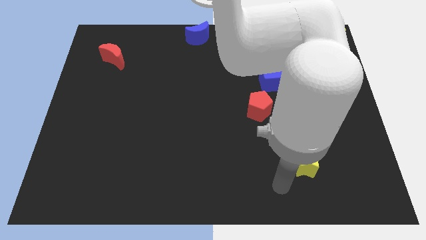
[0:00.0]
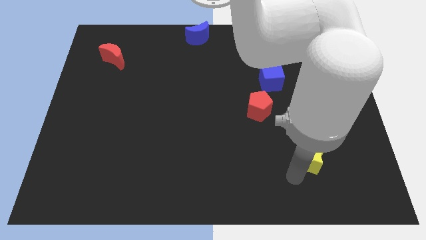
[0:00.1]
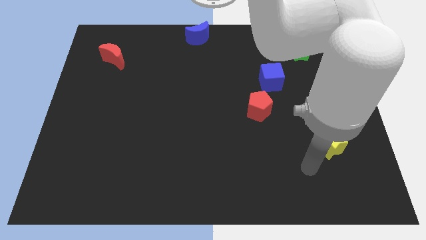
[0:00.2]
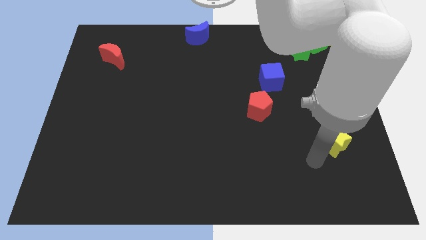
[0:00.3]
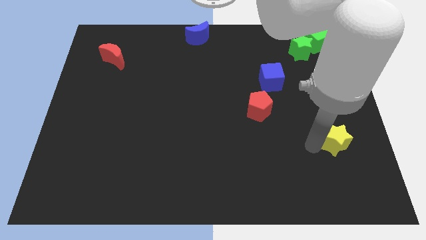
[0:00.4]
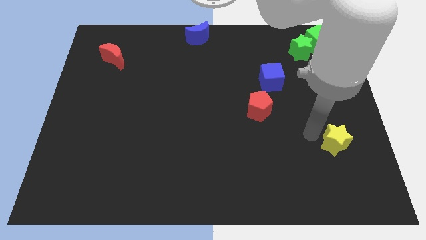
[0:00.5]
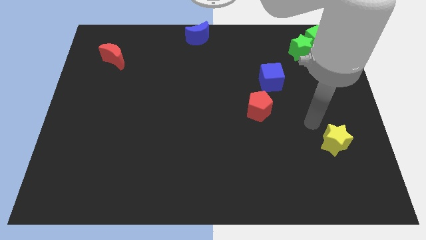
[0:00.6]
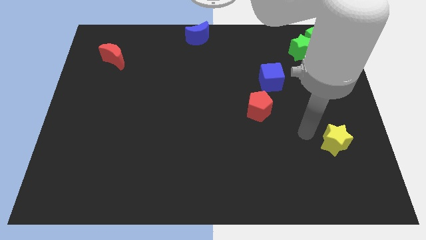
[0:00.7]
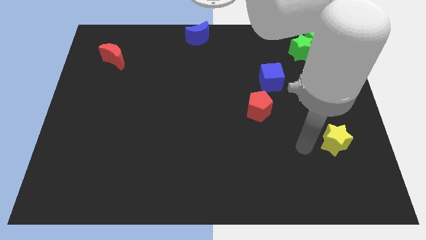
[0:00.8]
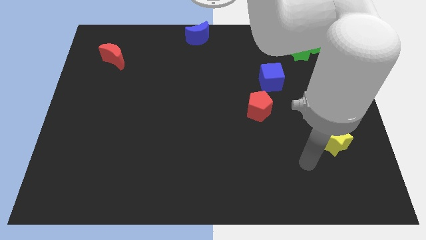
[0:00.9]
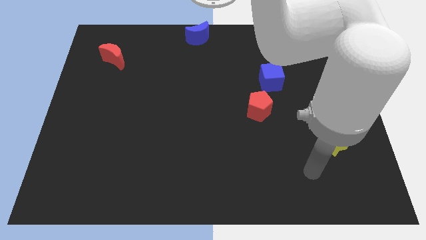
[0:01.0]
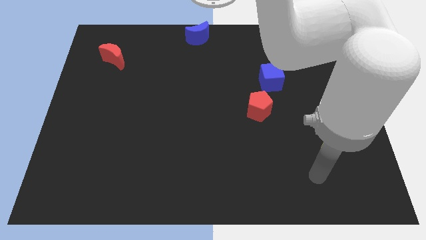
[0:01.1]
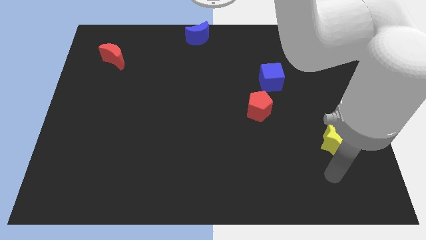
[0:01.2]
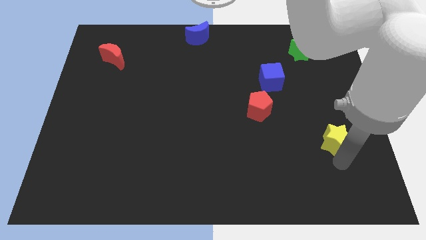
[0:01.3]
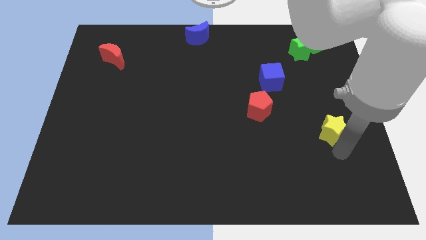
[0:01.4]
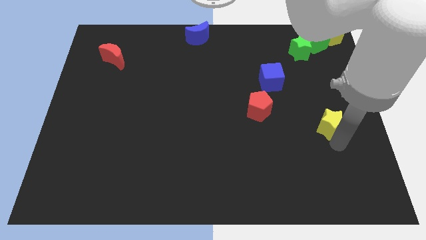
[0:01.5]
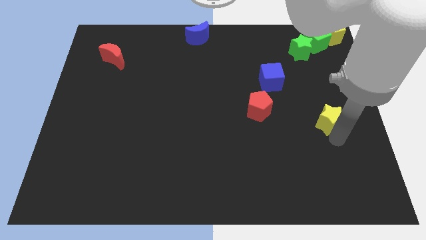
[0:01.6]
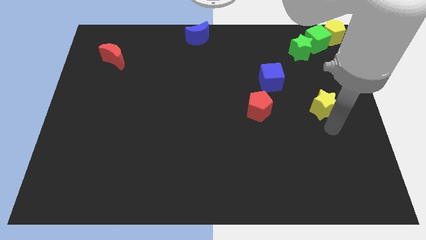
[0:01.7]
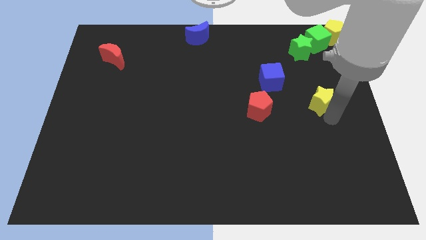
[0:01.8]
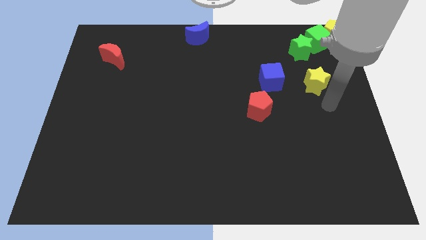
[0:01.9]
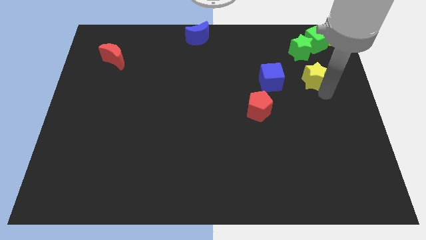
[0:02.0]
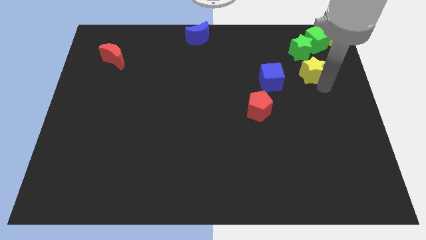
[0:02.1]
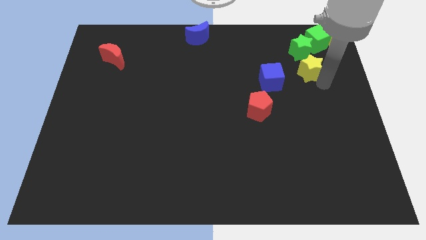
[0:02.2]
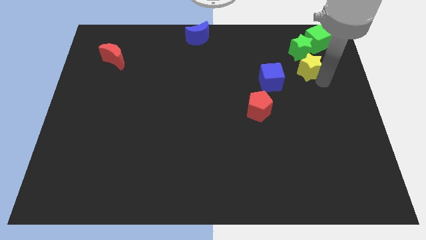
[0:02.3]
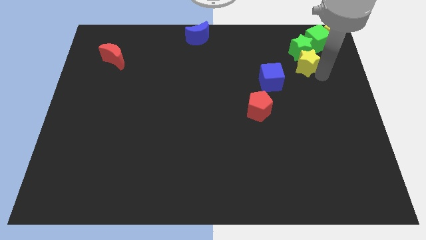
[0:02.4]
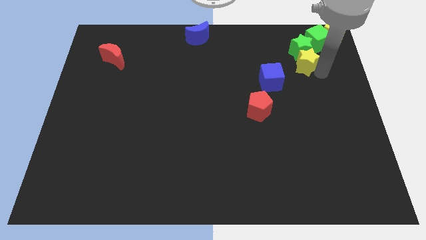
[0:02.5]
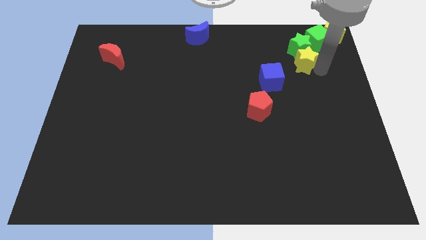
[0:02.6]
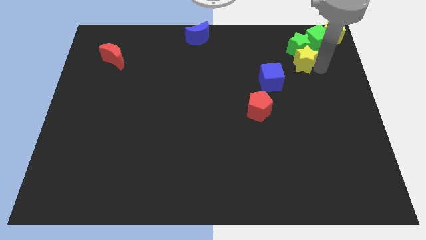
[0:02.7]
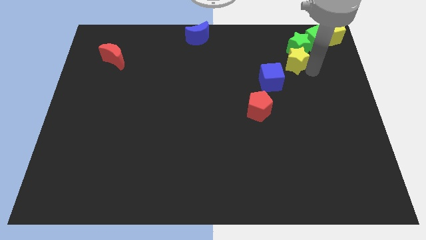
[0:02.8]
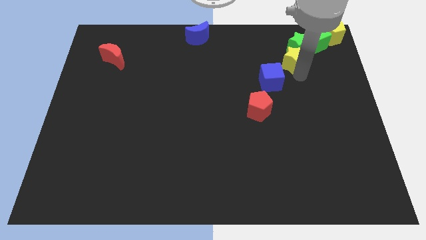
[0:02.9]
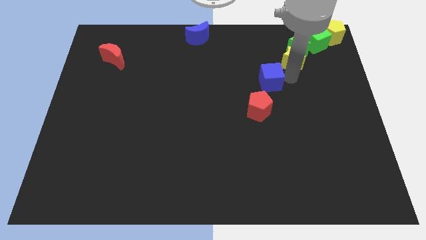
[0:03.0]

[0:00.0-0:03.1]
move the yellow star to the bottom left of the green star

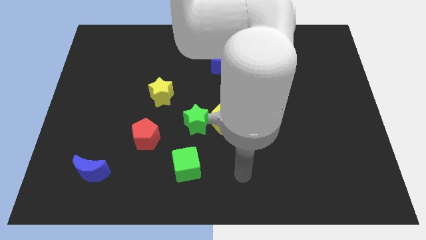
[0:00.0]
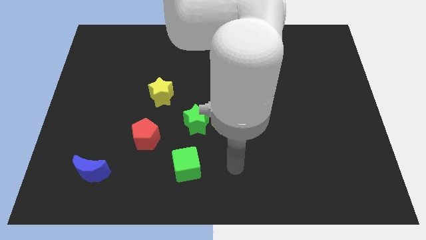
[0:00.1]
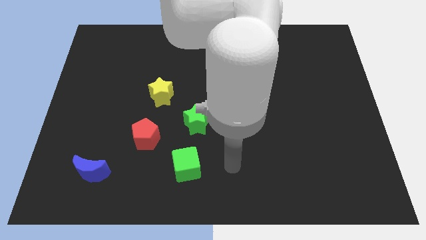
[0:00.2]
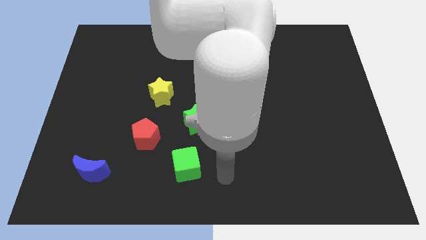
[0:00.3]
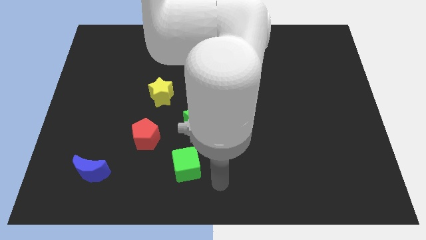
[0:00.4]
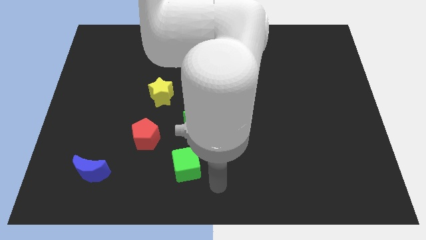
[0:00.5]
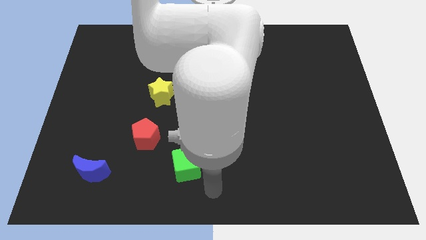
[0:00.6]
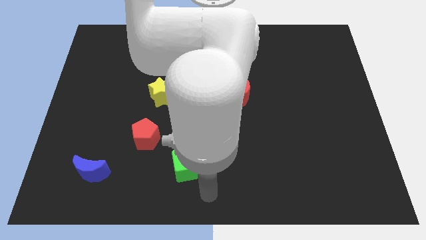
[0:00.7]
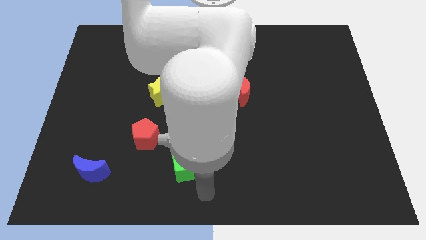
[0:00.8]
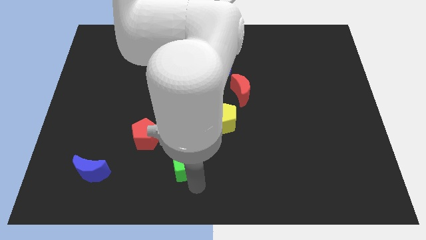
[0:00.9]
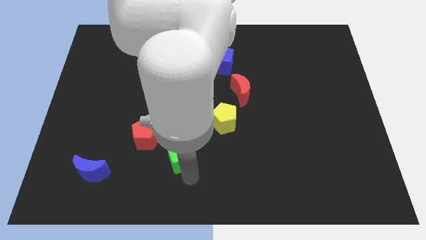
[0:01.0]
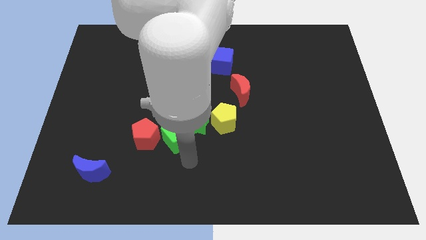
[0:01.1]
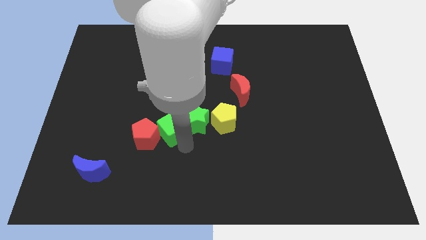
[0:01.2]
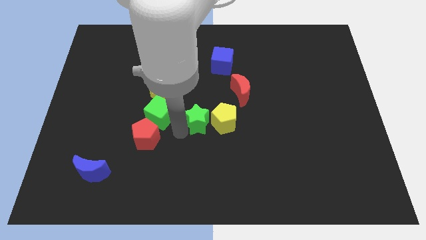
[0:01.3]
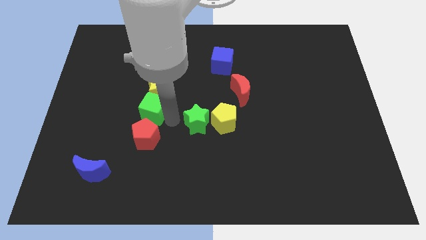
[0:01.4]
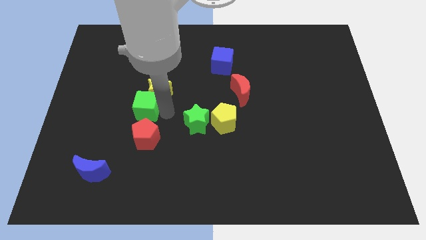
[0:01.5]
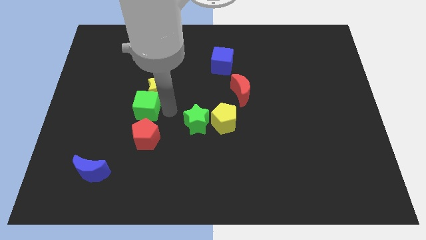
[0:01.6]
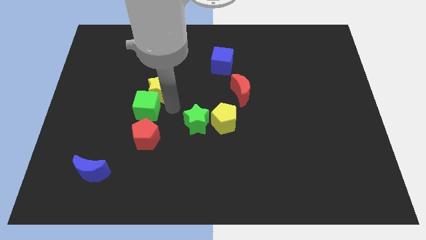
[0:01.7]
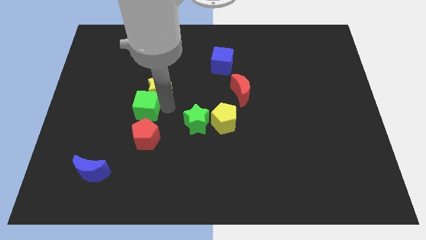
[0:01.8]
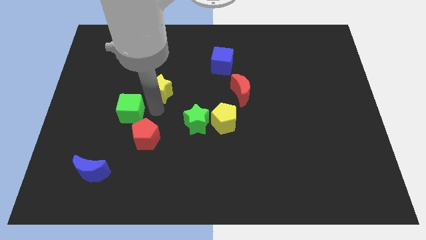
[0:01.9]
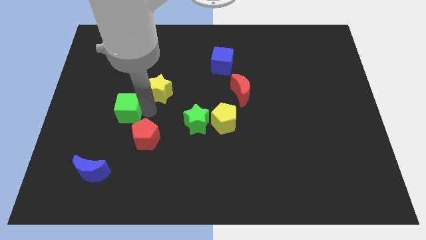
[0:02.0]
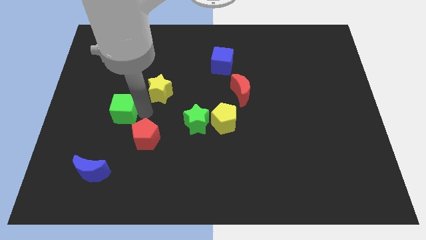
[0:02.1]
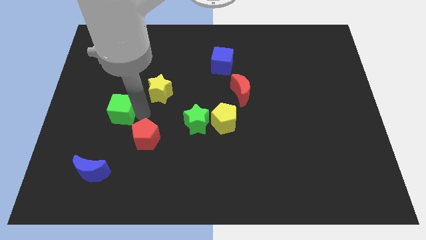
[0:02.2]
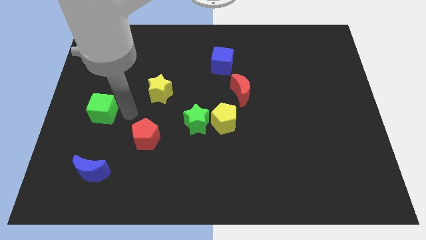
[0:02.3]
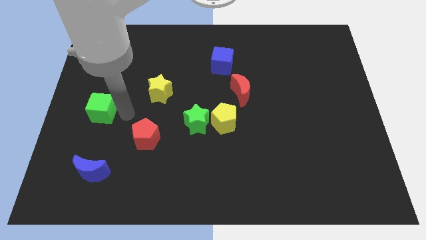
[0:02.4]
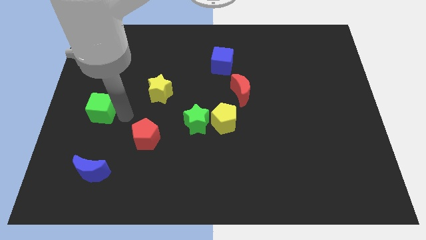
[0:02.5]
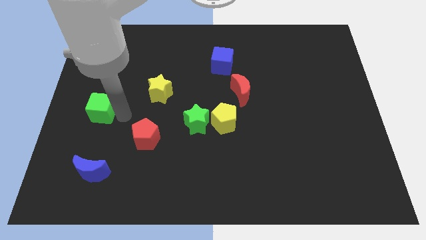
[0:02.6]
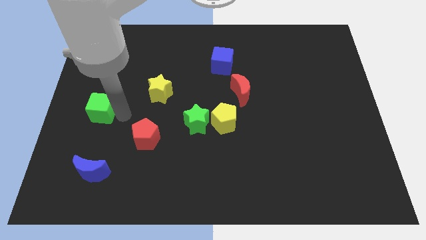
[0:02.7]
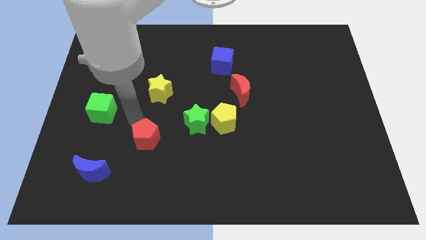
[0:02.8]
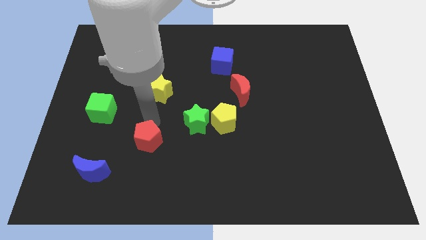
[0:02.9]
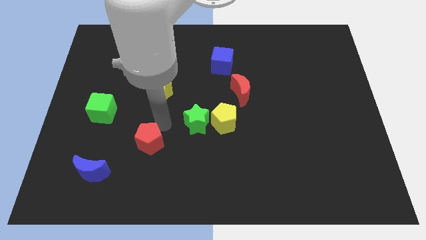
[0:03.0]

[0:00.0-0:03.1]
slightly push the green cube to the left

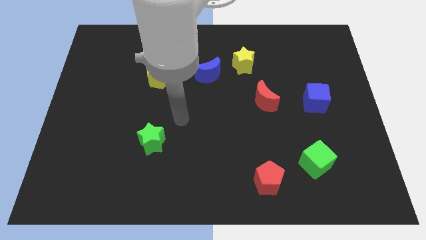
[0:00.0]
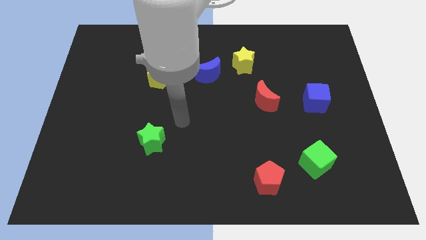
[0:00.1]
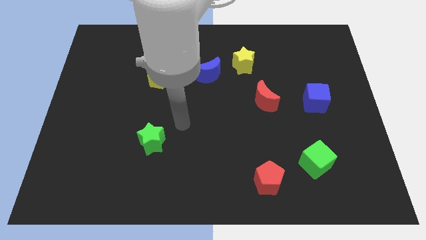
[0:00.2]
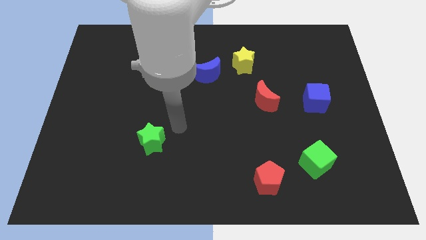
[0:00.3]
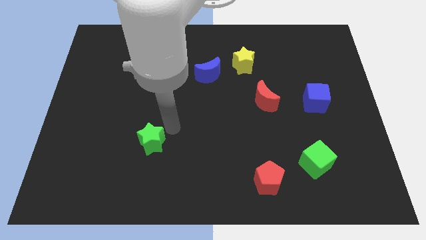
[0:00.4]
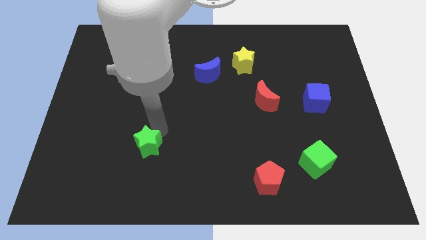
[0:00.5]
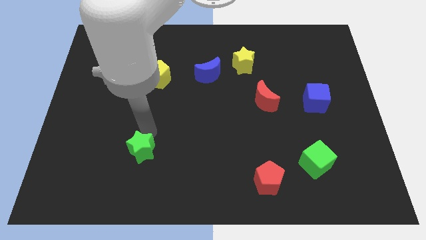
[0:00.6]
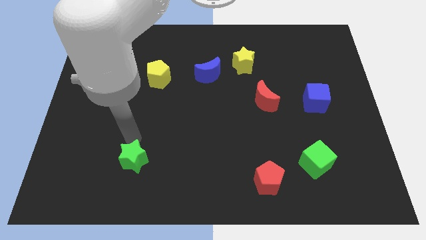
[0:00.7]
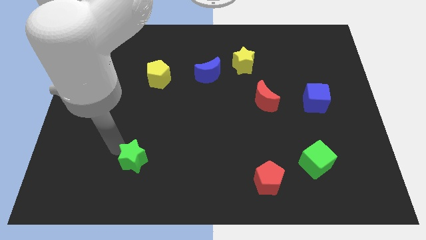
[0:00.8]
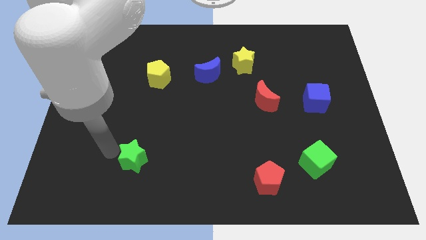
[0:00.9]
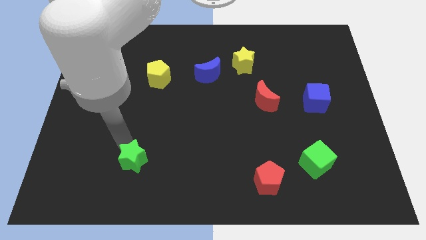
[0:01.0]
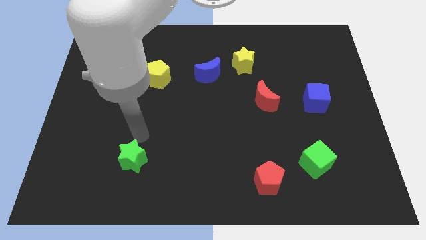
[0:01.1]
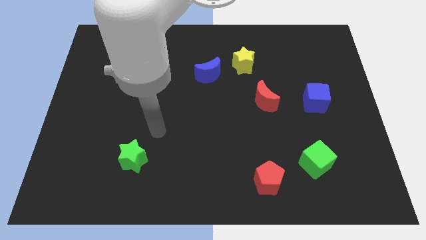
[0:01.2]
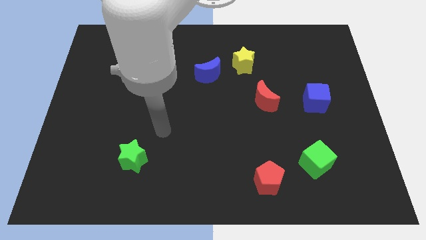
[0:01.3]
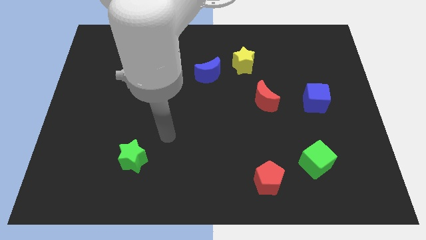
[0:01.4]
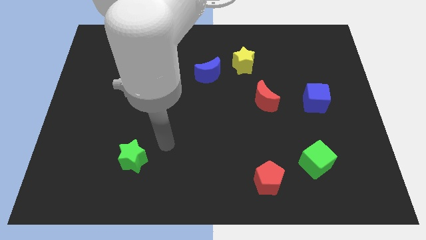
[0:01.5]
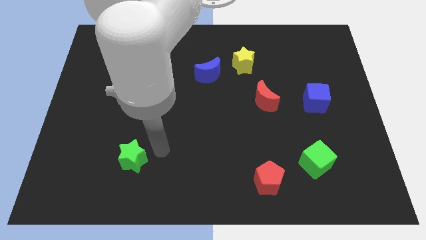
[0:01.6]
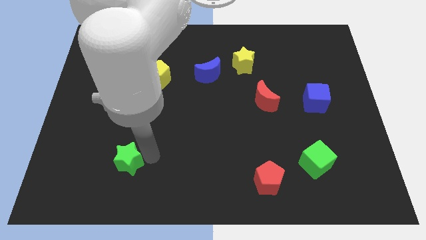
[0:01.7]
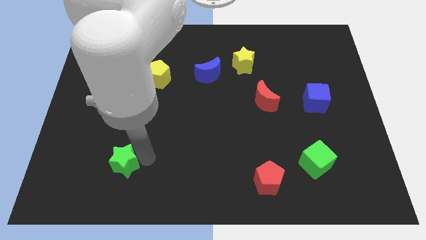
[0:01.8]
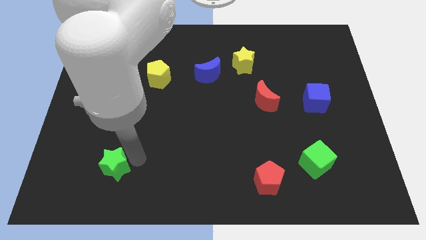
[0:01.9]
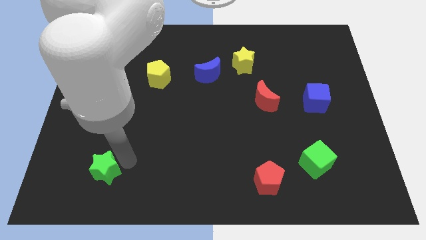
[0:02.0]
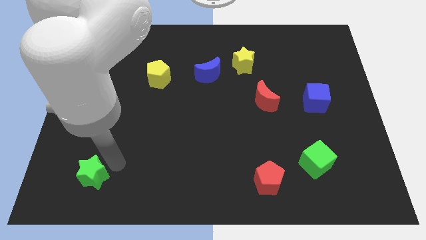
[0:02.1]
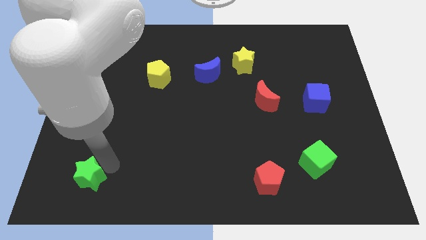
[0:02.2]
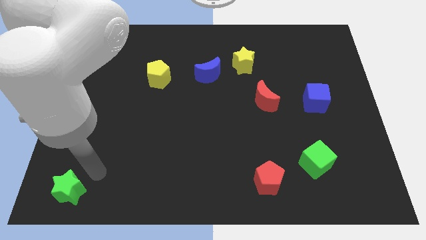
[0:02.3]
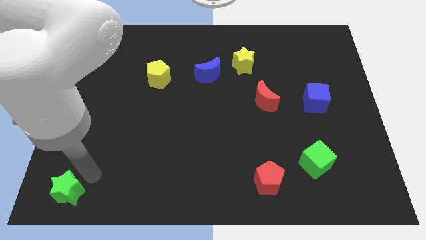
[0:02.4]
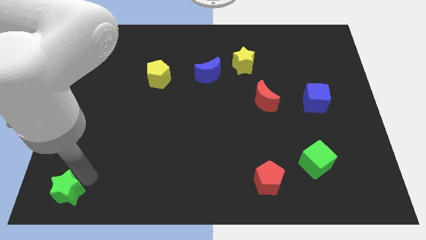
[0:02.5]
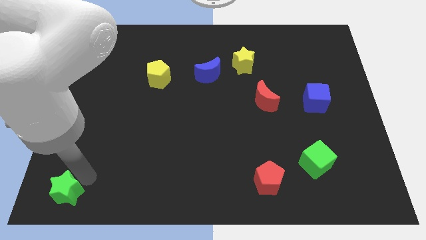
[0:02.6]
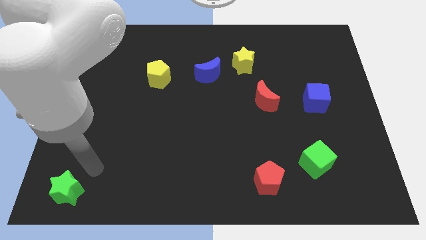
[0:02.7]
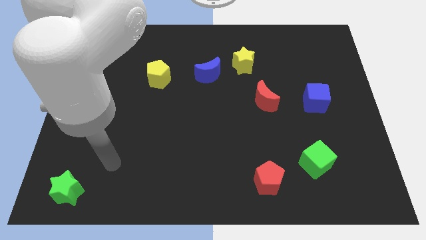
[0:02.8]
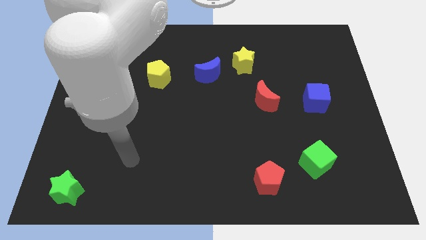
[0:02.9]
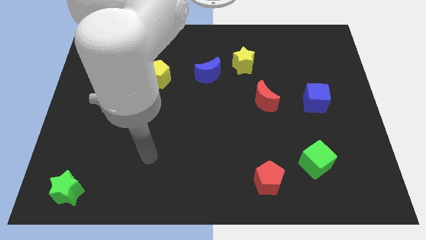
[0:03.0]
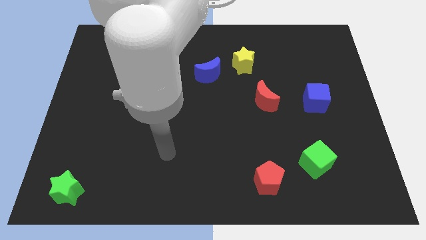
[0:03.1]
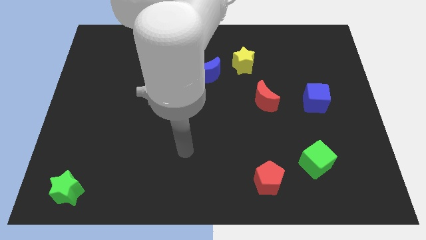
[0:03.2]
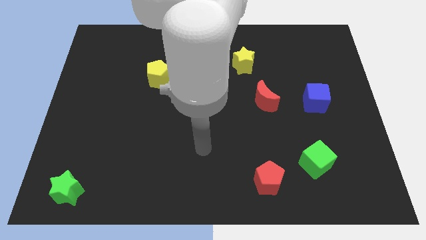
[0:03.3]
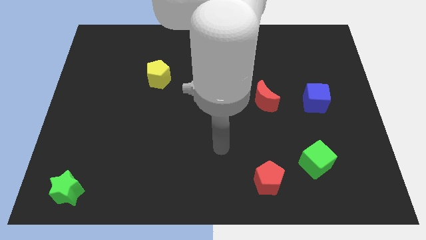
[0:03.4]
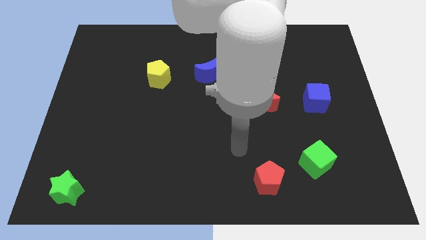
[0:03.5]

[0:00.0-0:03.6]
move the green star to the bottom left
